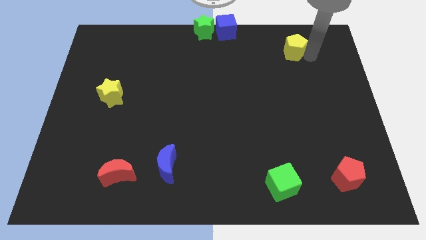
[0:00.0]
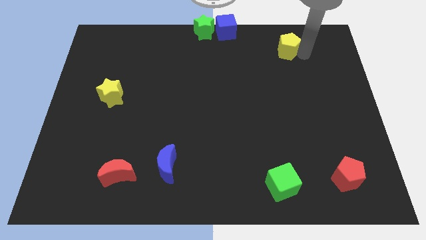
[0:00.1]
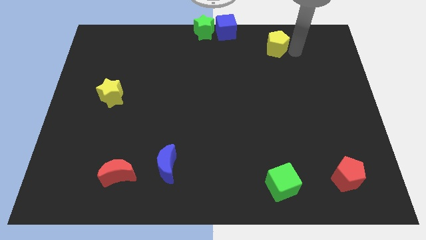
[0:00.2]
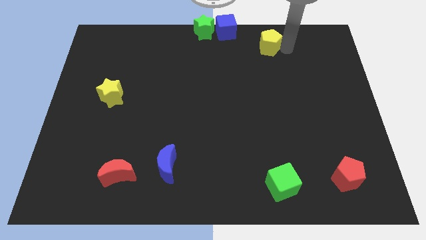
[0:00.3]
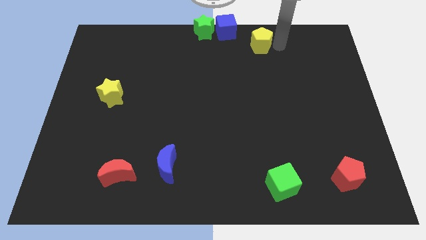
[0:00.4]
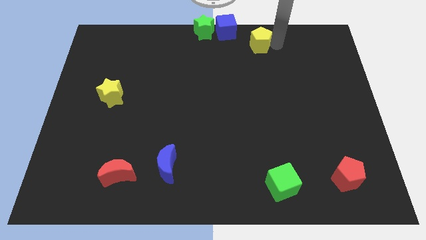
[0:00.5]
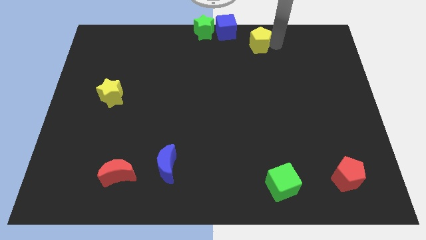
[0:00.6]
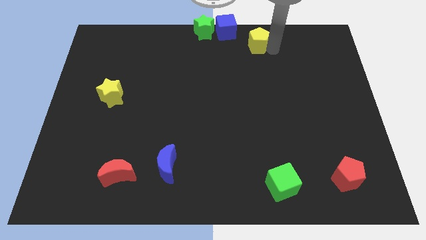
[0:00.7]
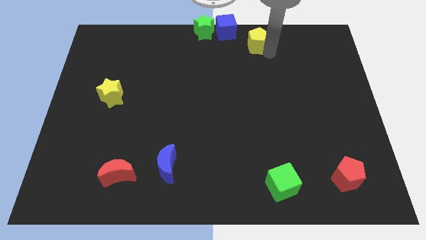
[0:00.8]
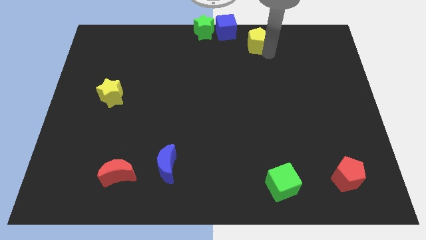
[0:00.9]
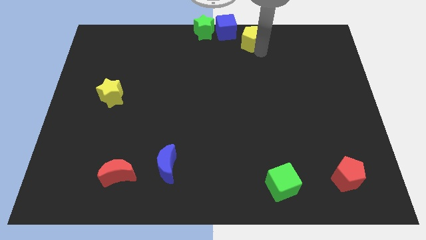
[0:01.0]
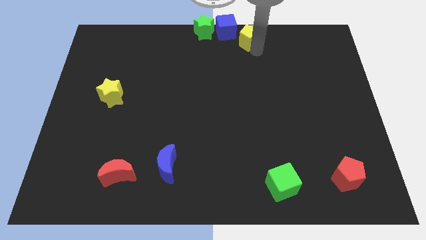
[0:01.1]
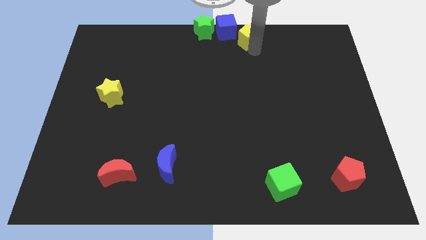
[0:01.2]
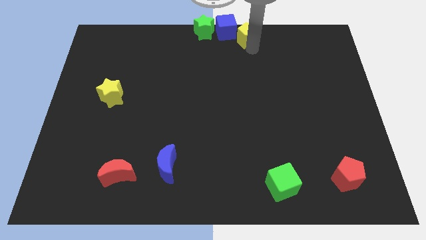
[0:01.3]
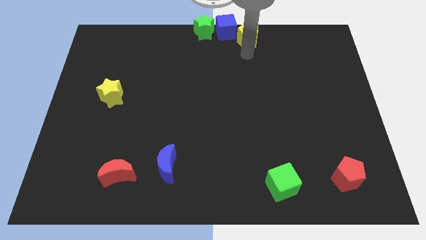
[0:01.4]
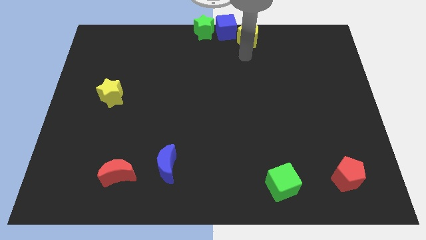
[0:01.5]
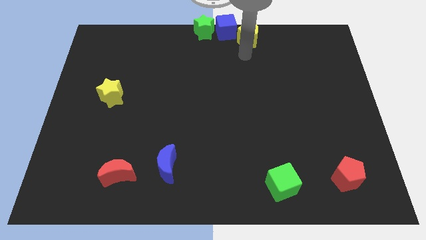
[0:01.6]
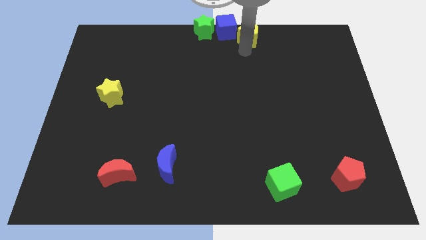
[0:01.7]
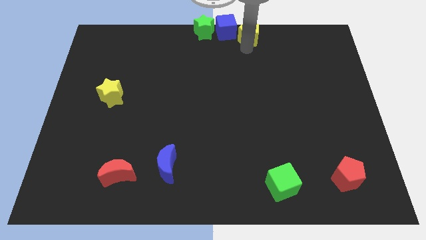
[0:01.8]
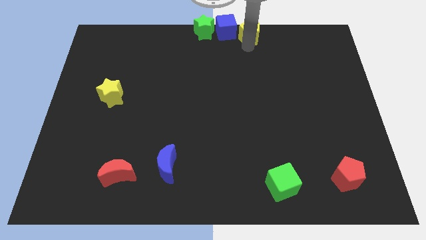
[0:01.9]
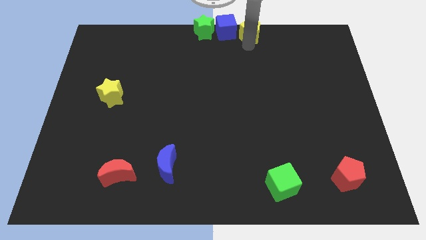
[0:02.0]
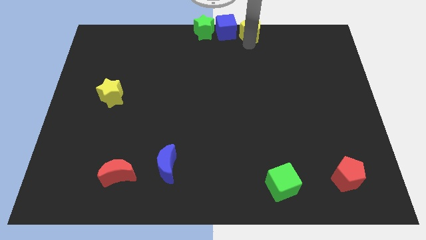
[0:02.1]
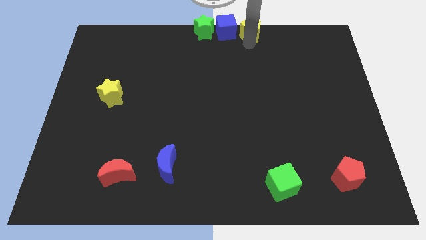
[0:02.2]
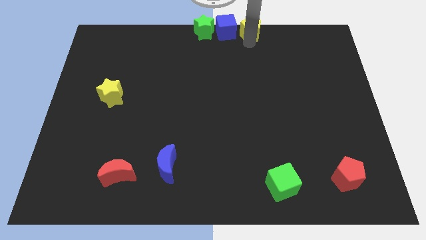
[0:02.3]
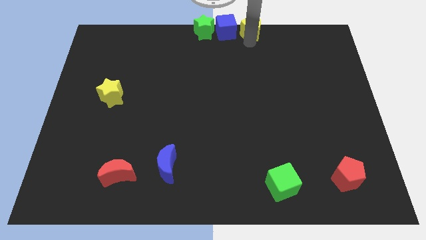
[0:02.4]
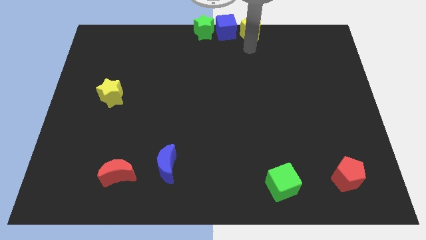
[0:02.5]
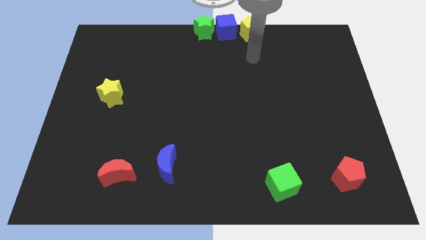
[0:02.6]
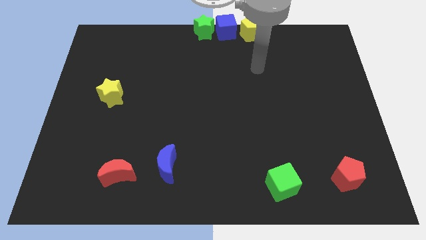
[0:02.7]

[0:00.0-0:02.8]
move the yellow pentagon to the right side of the blue cube

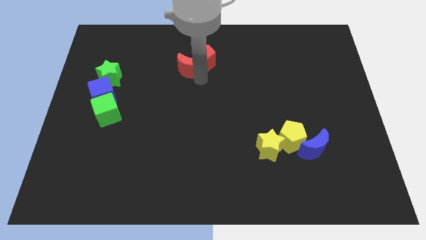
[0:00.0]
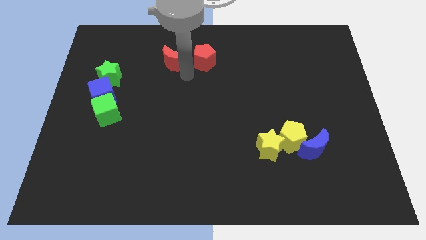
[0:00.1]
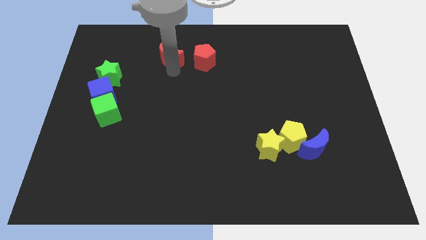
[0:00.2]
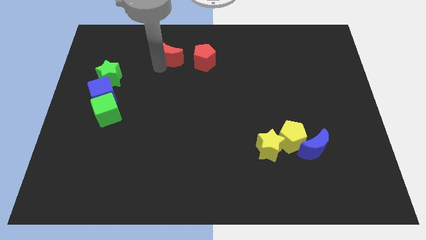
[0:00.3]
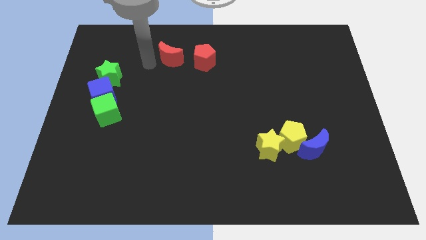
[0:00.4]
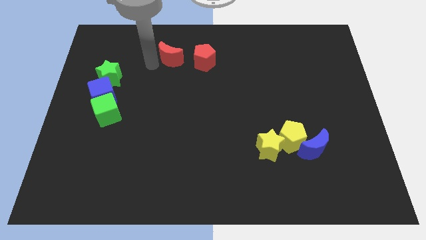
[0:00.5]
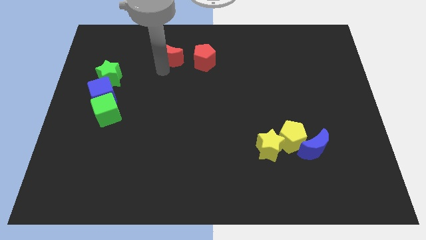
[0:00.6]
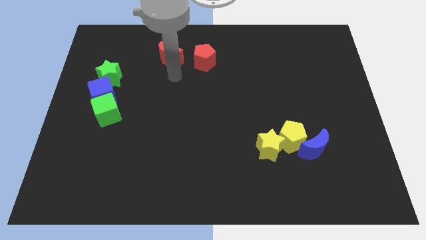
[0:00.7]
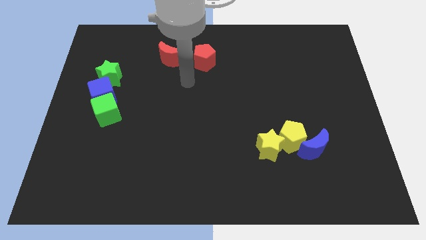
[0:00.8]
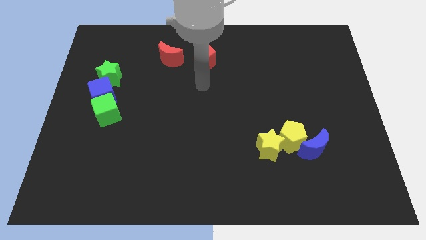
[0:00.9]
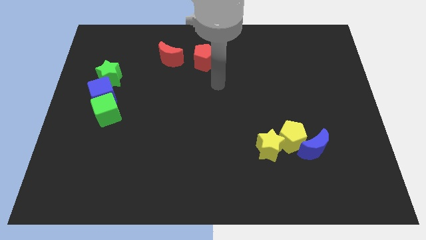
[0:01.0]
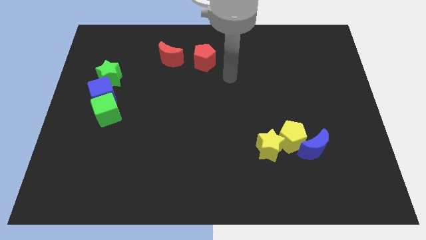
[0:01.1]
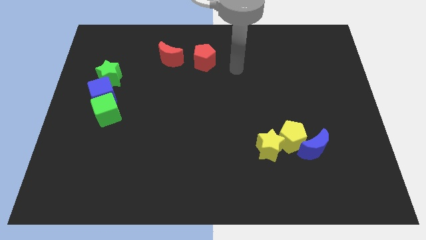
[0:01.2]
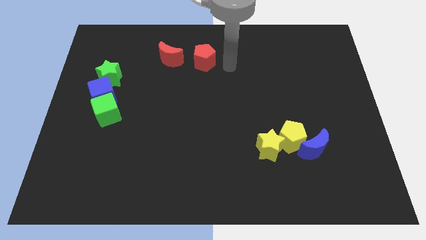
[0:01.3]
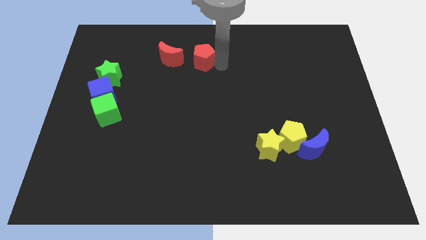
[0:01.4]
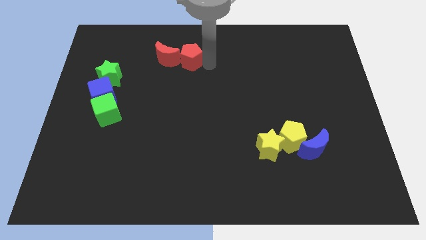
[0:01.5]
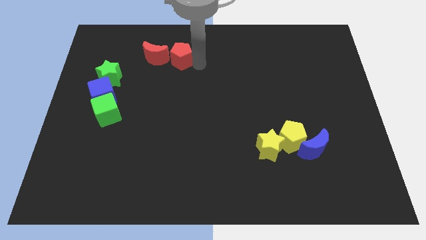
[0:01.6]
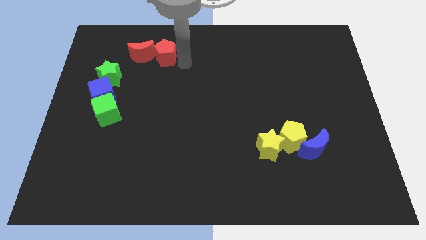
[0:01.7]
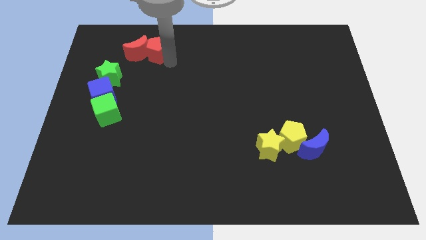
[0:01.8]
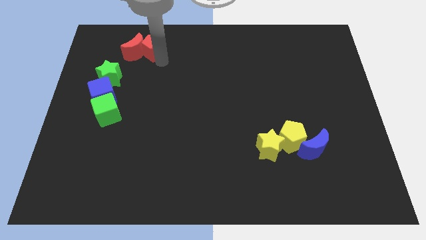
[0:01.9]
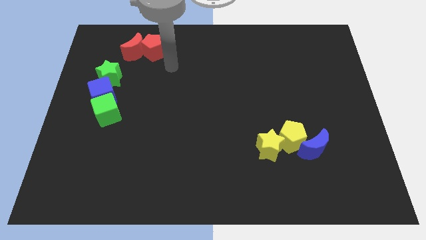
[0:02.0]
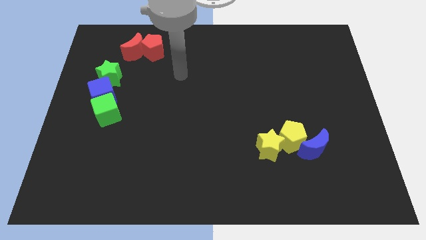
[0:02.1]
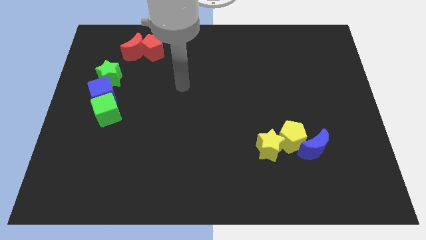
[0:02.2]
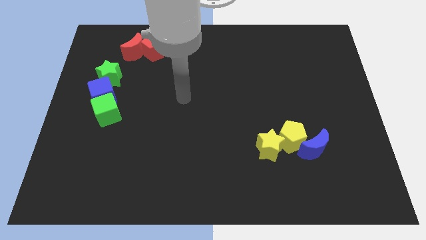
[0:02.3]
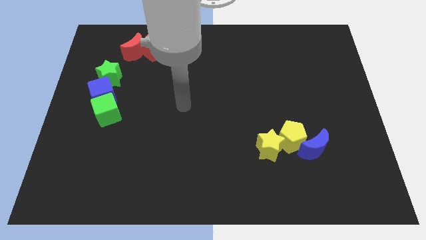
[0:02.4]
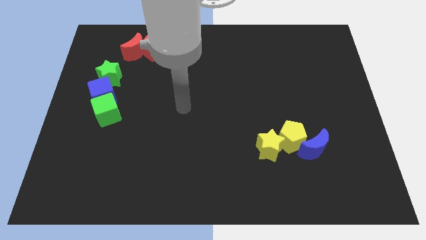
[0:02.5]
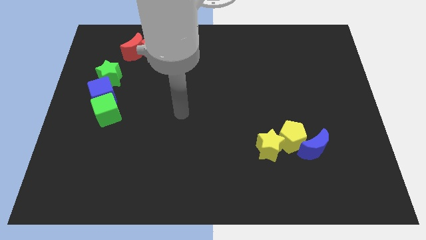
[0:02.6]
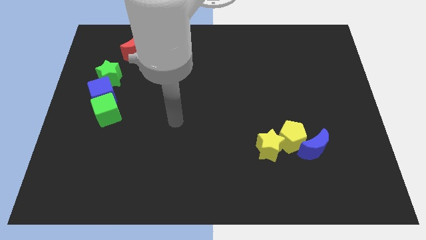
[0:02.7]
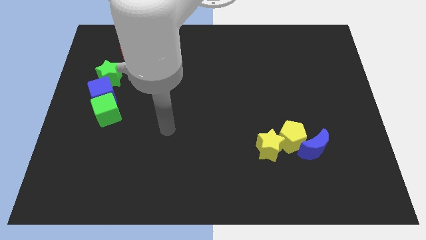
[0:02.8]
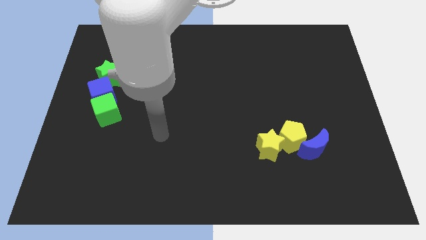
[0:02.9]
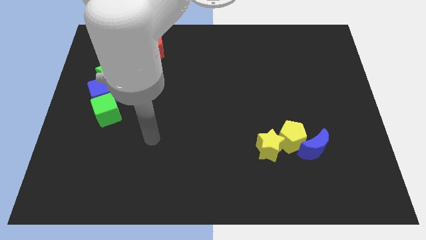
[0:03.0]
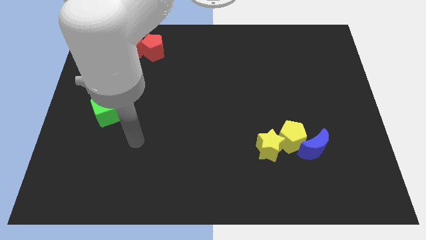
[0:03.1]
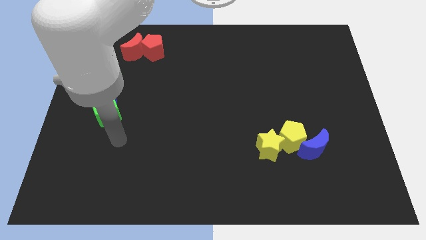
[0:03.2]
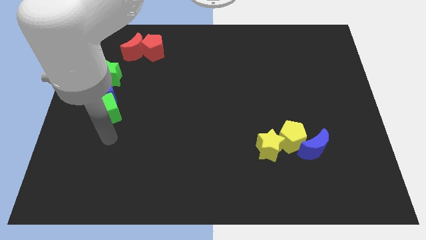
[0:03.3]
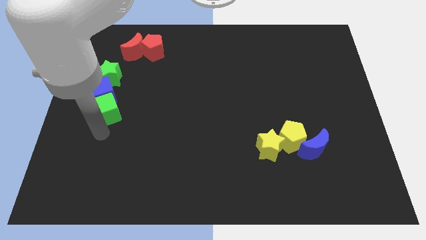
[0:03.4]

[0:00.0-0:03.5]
move the red blocks to the left side of the board

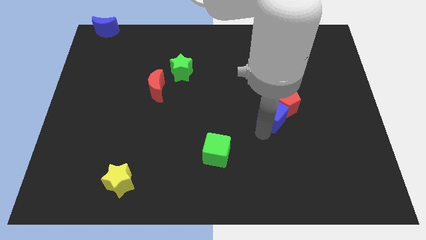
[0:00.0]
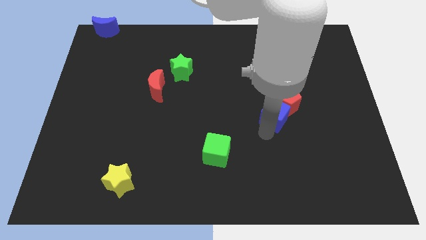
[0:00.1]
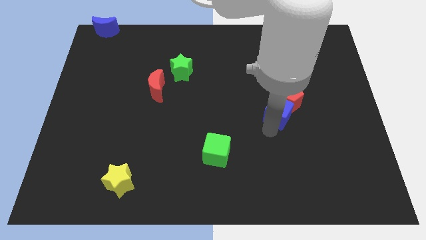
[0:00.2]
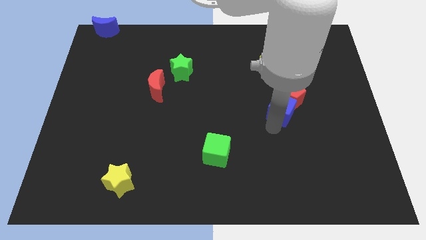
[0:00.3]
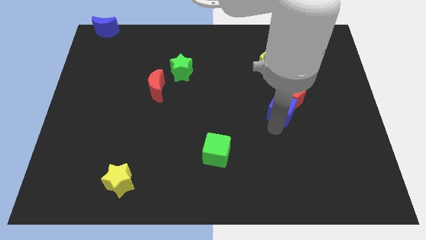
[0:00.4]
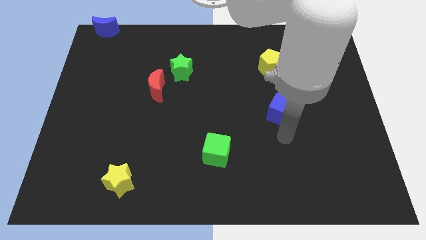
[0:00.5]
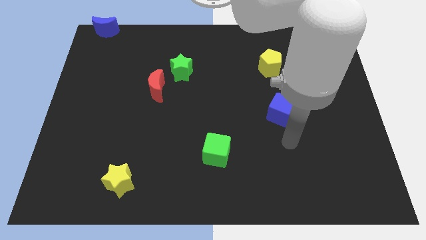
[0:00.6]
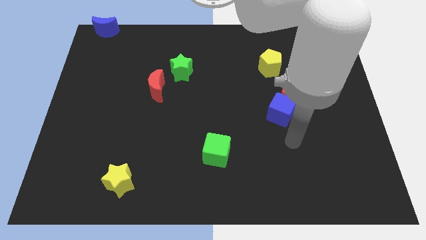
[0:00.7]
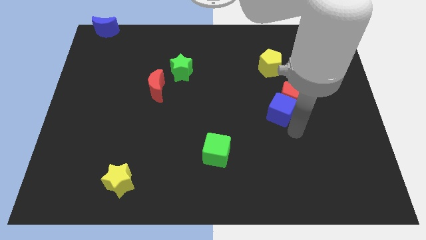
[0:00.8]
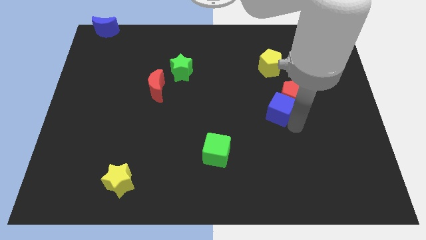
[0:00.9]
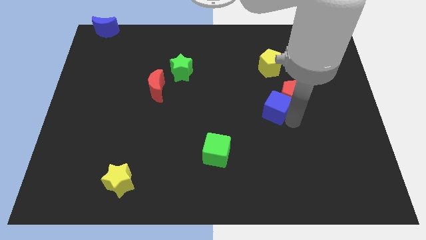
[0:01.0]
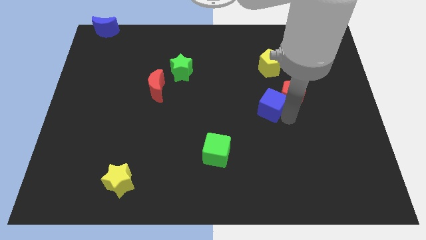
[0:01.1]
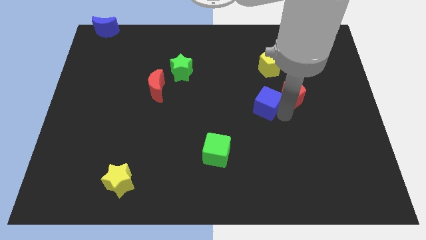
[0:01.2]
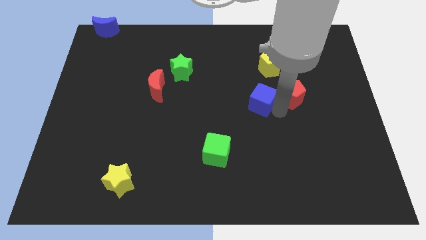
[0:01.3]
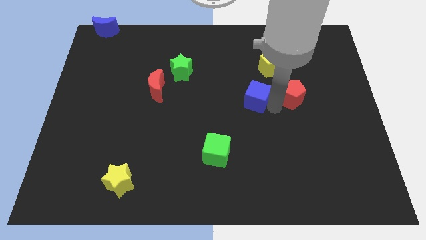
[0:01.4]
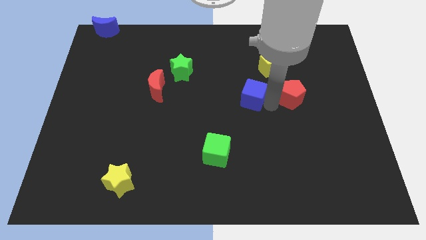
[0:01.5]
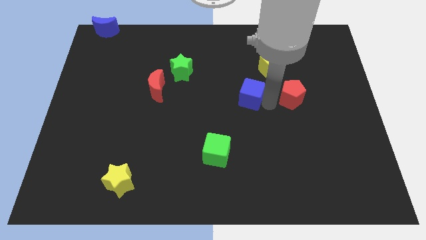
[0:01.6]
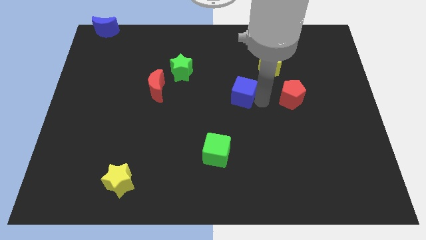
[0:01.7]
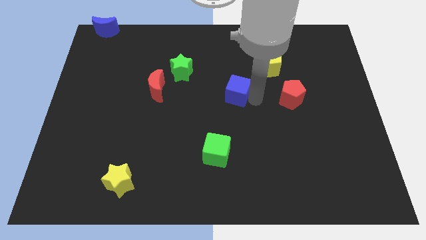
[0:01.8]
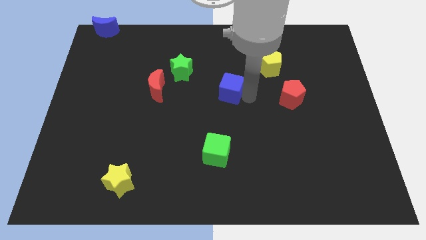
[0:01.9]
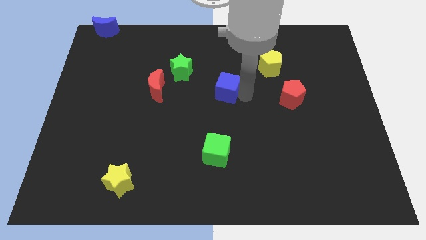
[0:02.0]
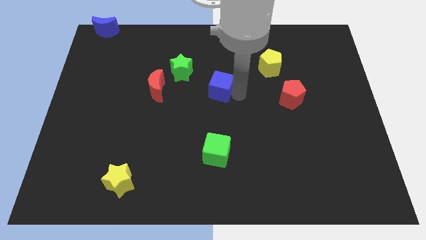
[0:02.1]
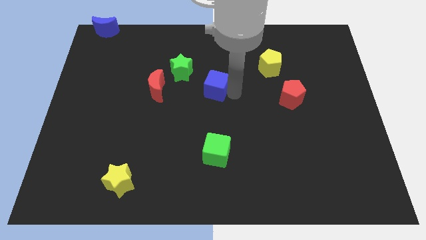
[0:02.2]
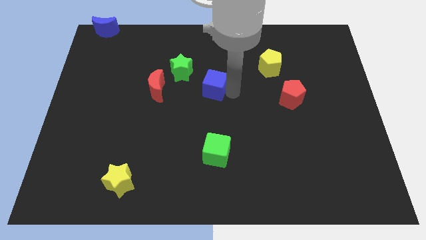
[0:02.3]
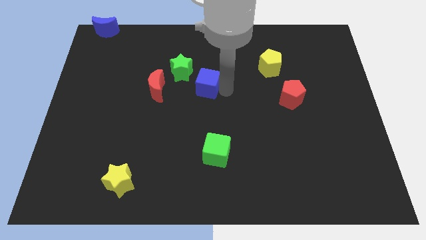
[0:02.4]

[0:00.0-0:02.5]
separate the blue cube and red pentagon
